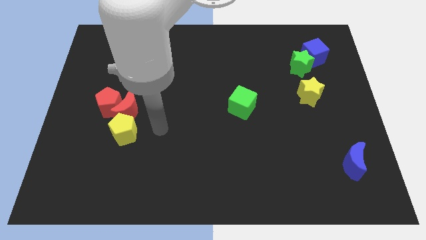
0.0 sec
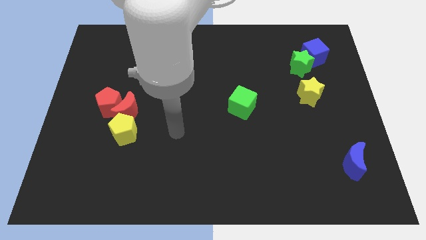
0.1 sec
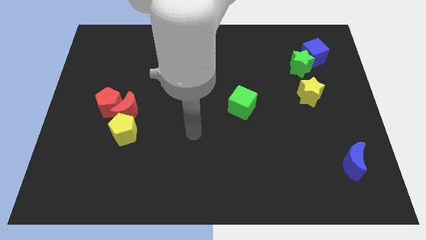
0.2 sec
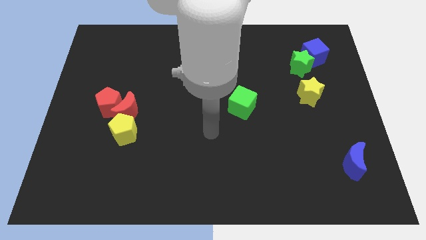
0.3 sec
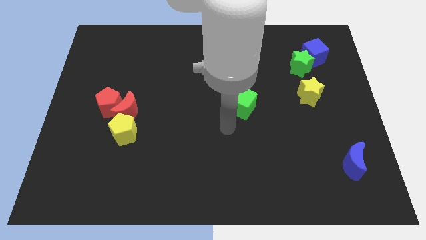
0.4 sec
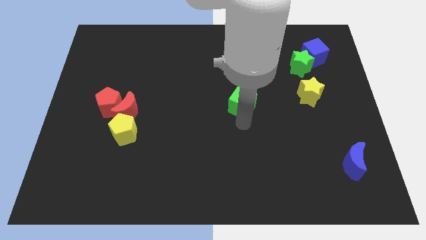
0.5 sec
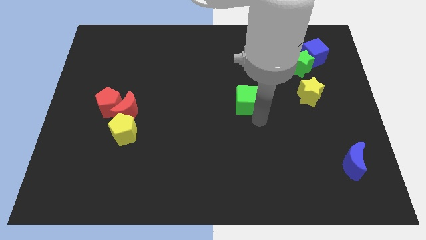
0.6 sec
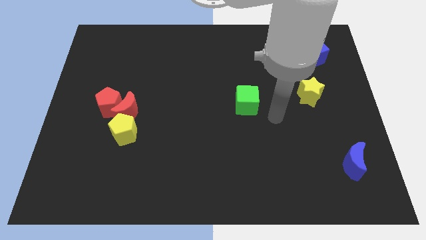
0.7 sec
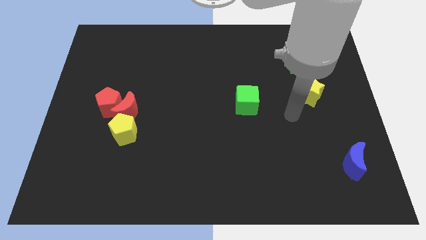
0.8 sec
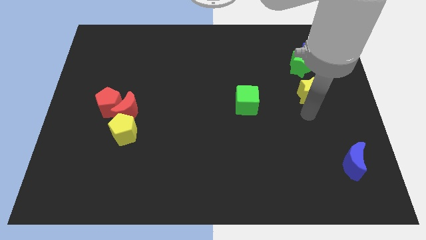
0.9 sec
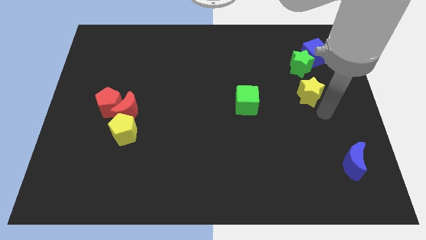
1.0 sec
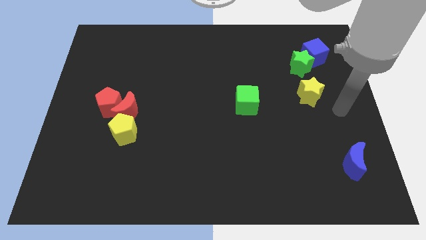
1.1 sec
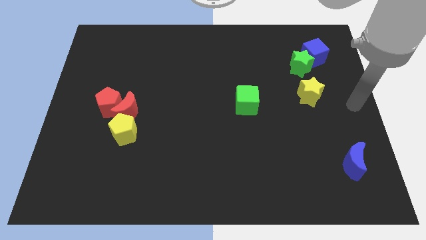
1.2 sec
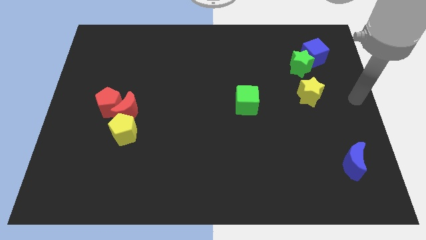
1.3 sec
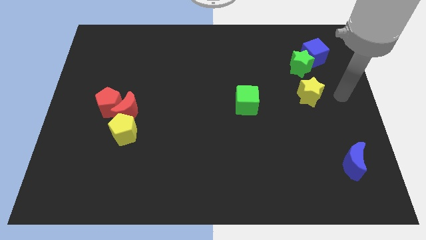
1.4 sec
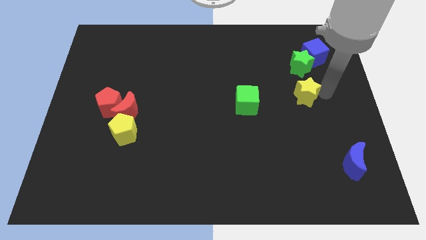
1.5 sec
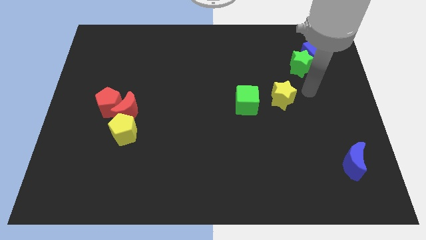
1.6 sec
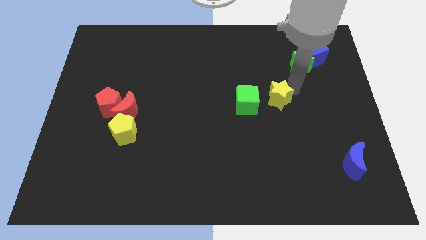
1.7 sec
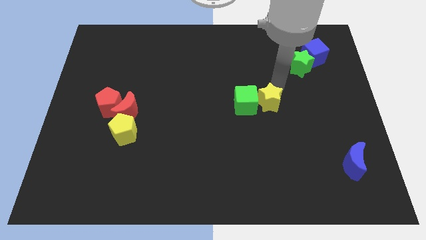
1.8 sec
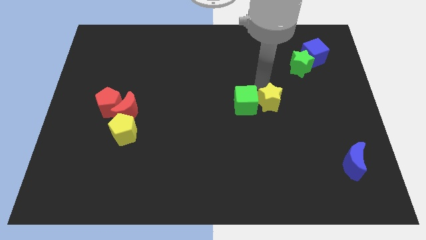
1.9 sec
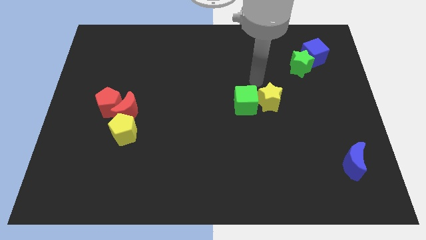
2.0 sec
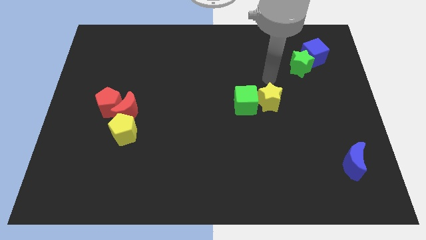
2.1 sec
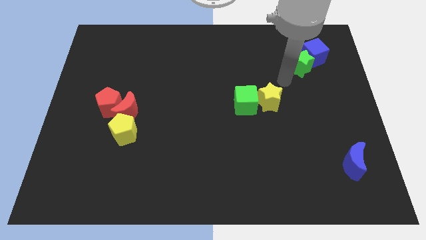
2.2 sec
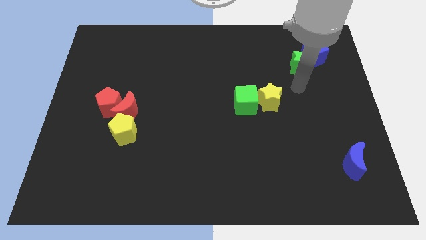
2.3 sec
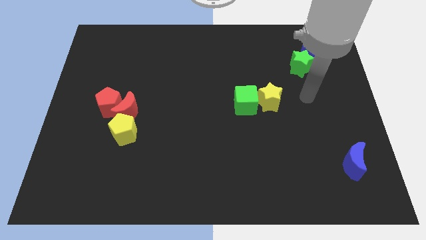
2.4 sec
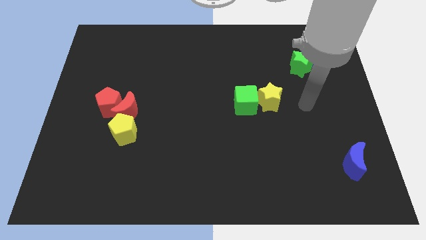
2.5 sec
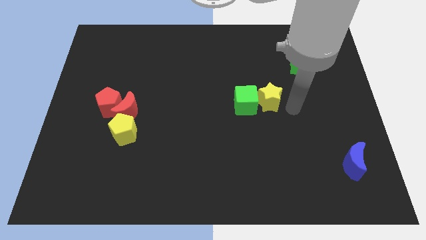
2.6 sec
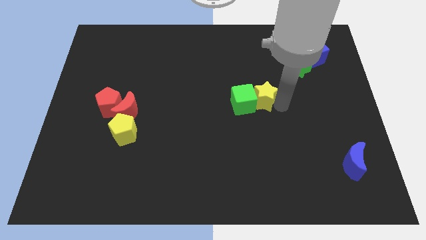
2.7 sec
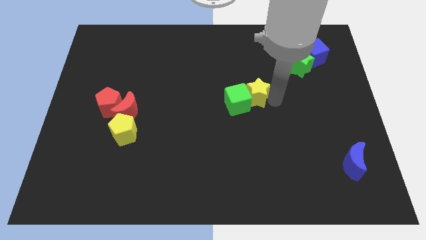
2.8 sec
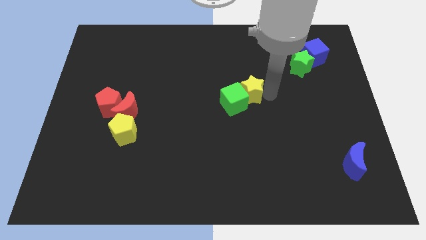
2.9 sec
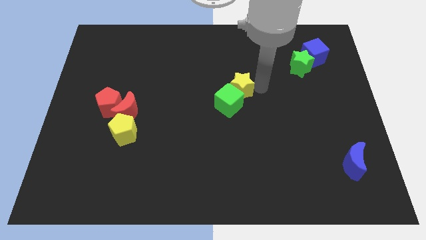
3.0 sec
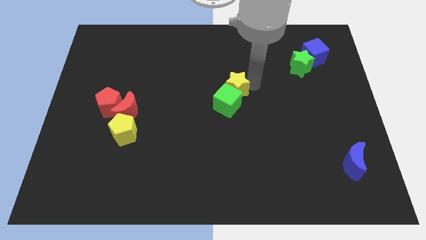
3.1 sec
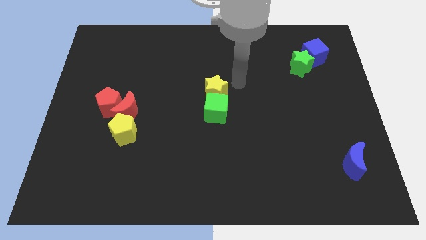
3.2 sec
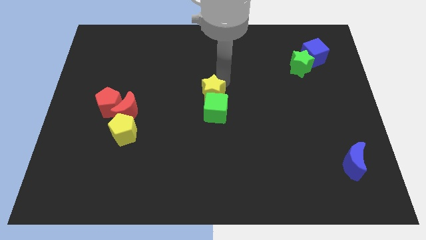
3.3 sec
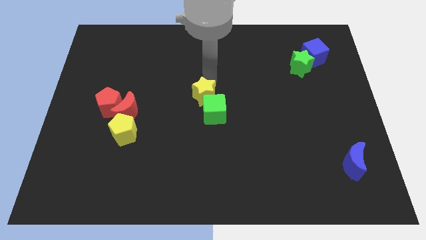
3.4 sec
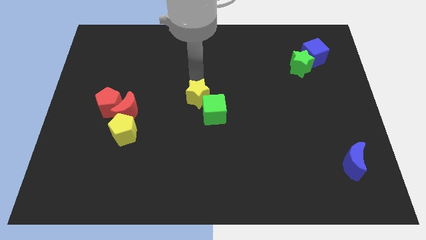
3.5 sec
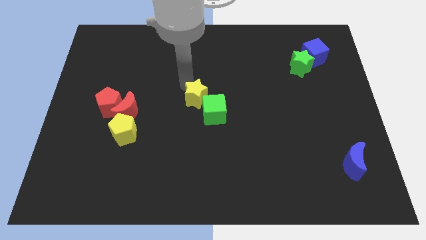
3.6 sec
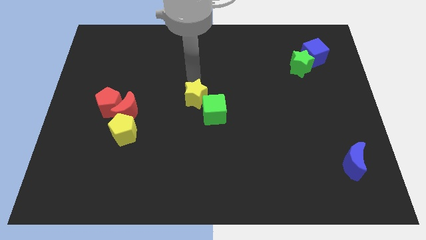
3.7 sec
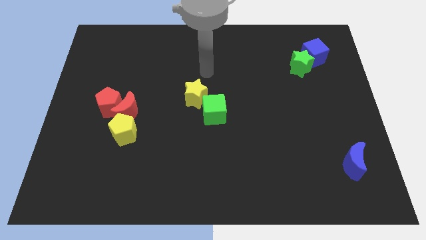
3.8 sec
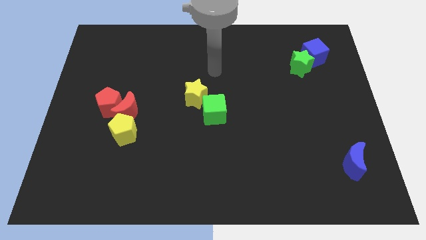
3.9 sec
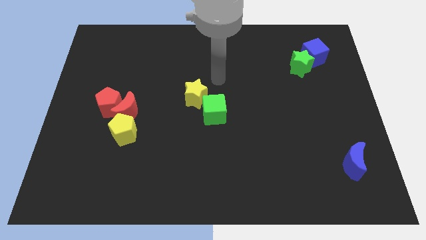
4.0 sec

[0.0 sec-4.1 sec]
push the green cube towards the center using yellow star

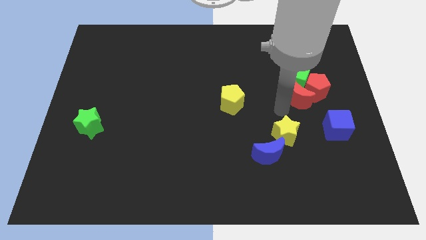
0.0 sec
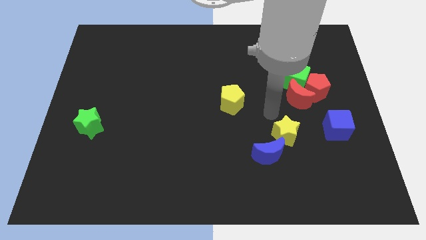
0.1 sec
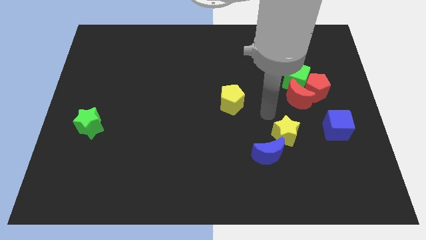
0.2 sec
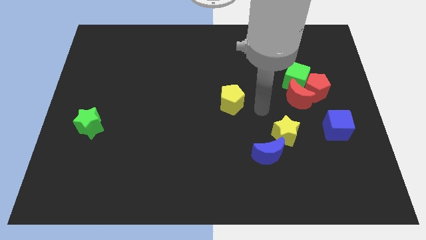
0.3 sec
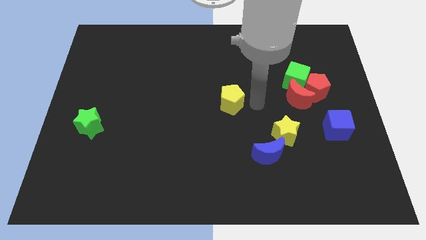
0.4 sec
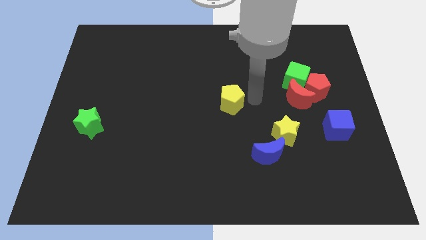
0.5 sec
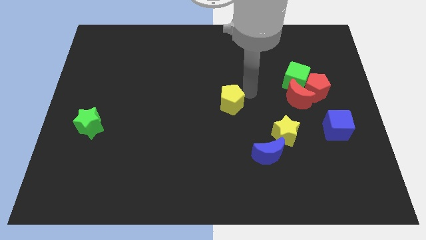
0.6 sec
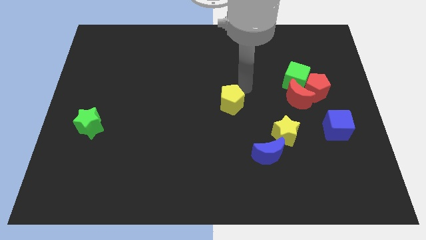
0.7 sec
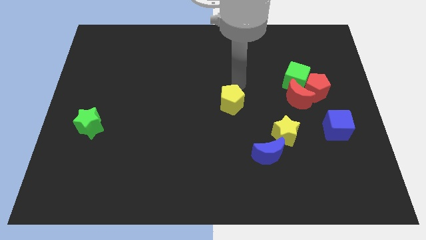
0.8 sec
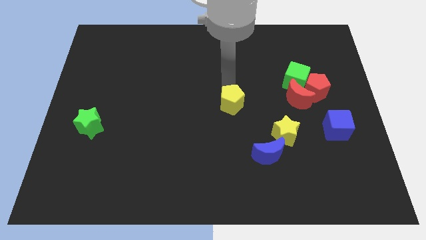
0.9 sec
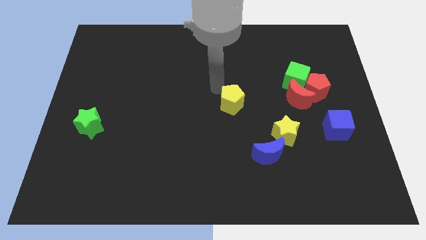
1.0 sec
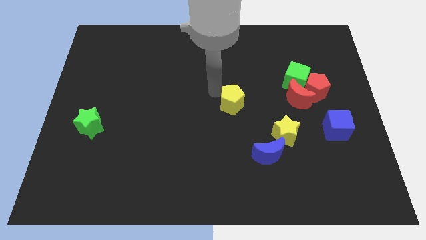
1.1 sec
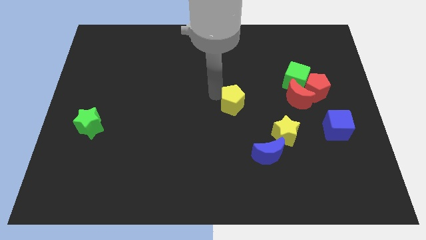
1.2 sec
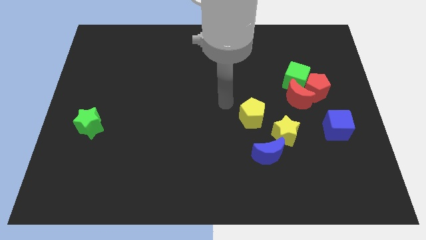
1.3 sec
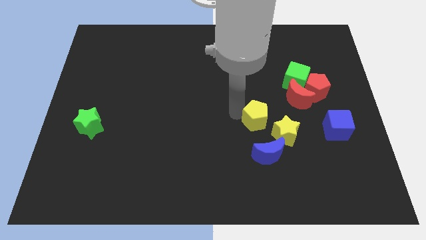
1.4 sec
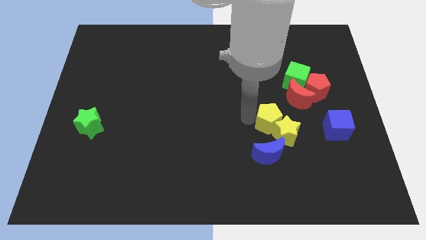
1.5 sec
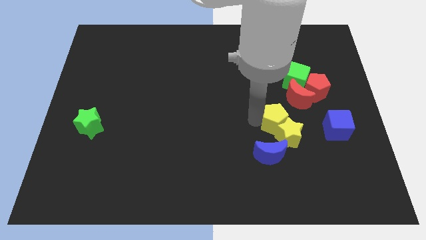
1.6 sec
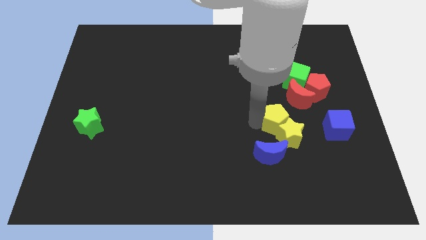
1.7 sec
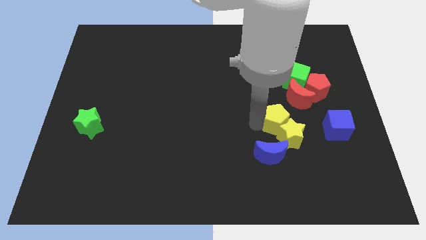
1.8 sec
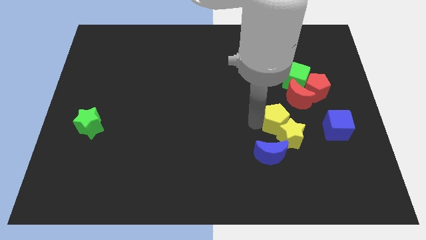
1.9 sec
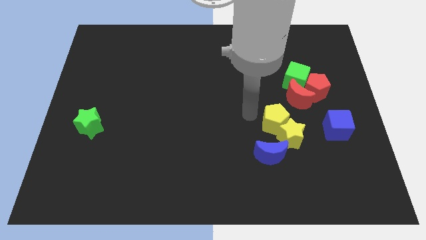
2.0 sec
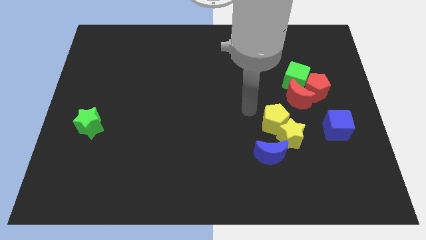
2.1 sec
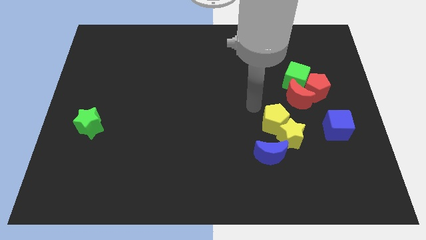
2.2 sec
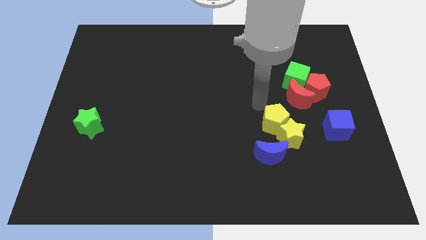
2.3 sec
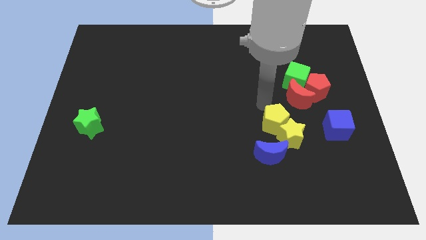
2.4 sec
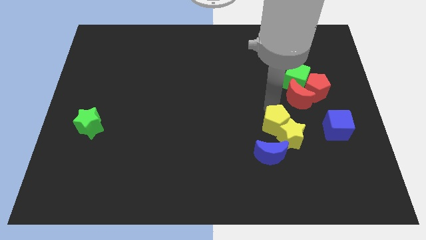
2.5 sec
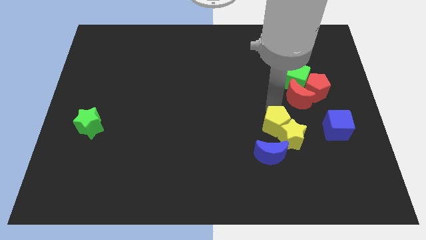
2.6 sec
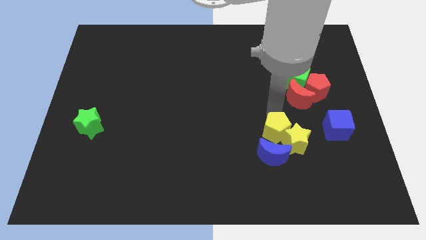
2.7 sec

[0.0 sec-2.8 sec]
move yellow pentagon into yellow star

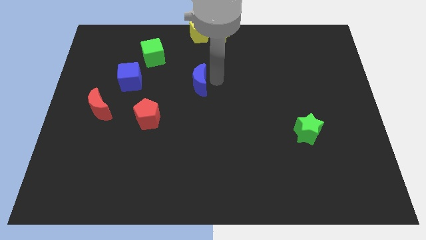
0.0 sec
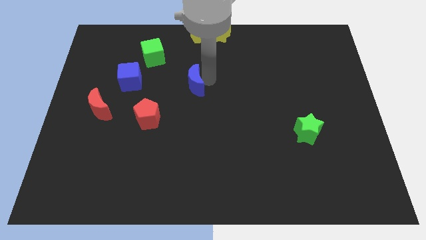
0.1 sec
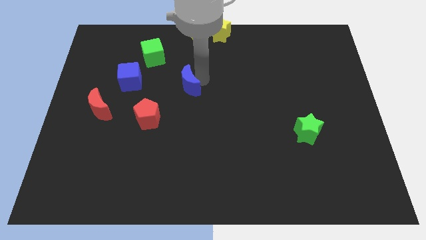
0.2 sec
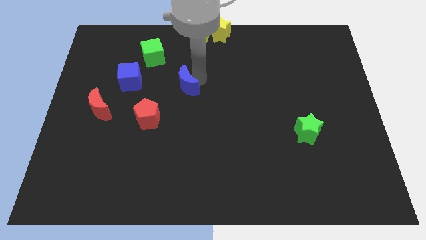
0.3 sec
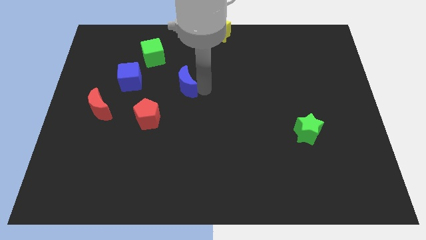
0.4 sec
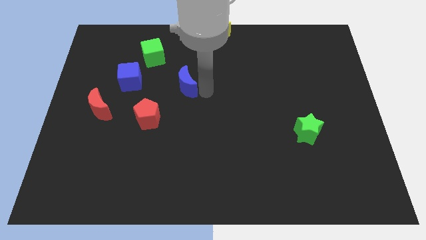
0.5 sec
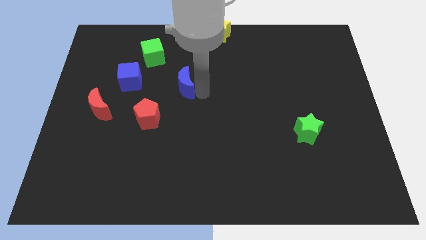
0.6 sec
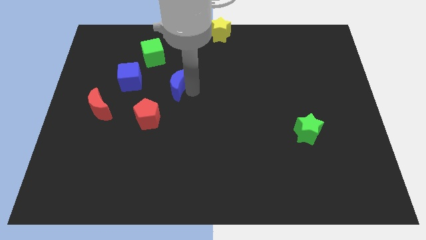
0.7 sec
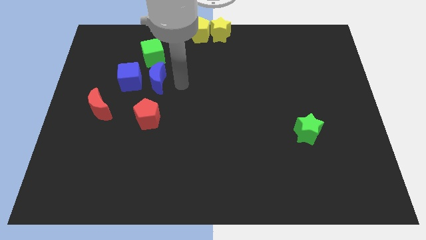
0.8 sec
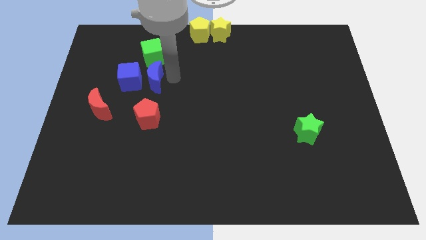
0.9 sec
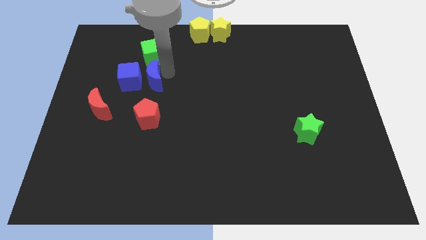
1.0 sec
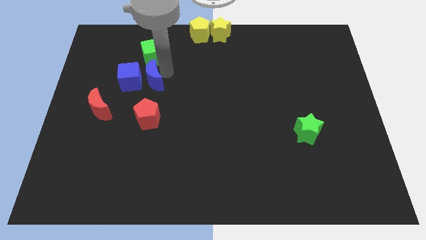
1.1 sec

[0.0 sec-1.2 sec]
place the blue moon in between the green cube and red pentagon

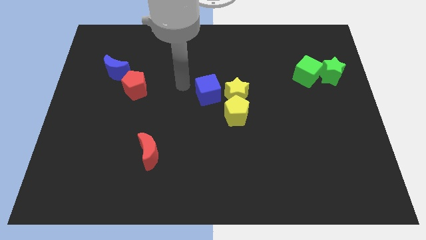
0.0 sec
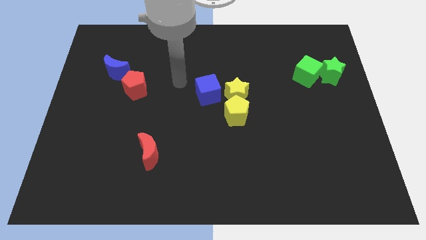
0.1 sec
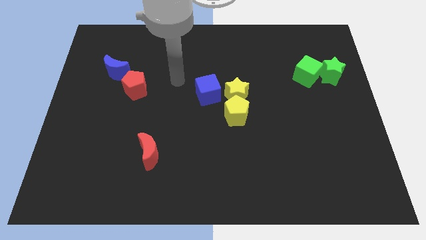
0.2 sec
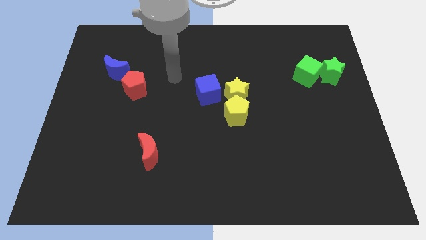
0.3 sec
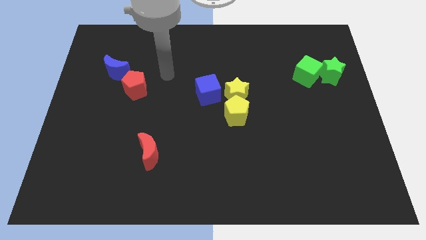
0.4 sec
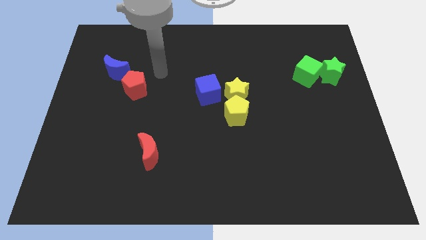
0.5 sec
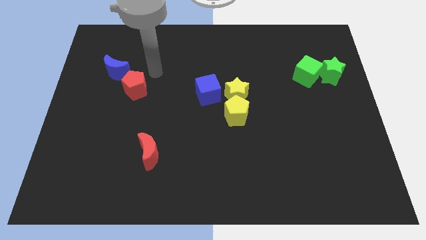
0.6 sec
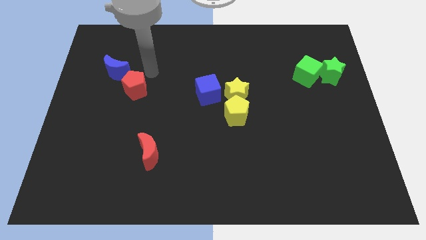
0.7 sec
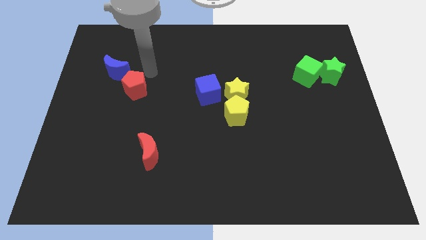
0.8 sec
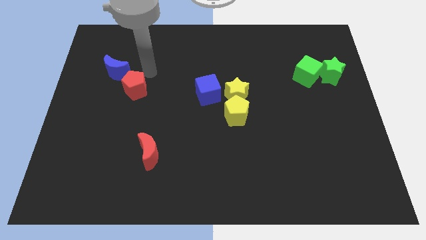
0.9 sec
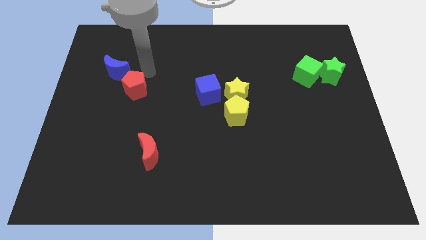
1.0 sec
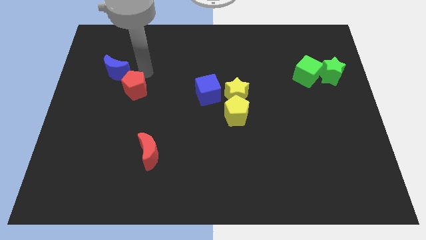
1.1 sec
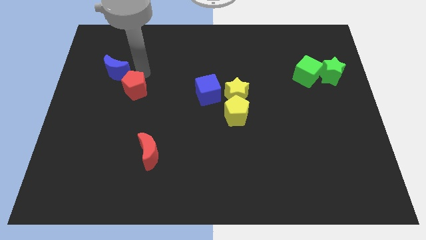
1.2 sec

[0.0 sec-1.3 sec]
move your arm towards the red pentagon
